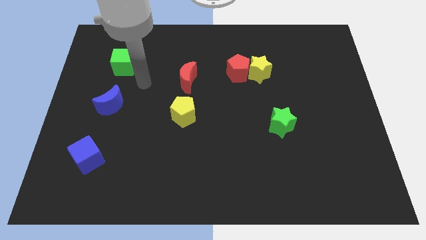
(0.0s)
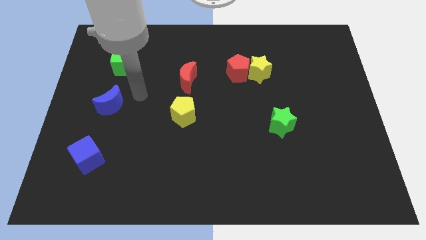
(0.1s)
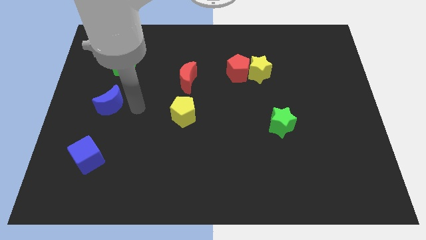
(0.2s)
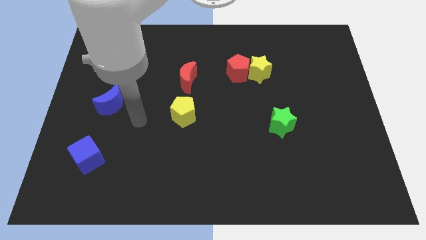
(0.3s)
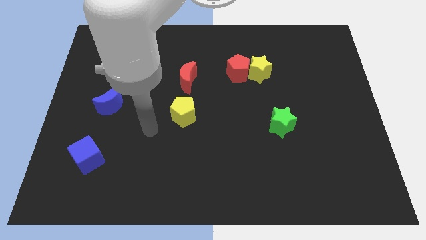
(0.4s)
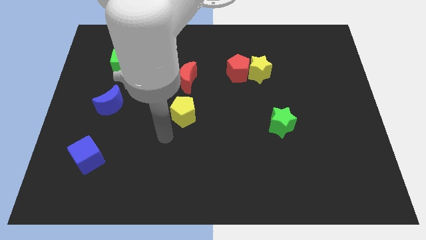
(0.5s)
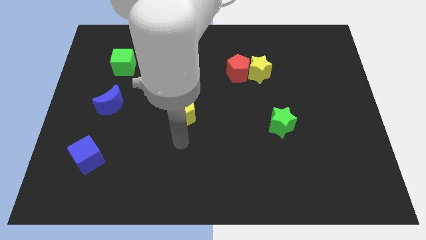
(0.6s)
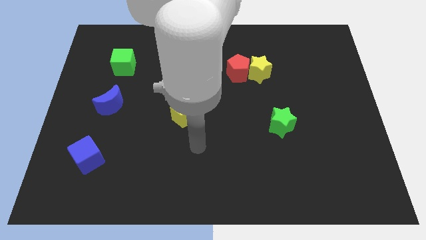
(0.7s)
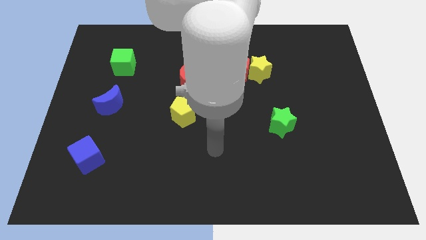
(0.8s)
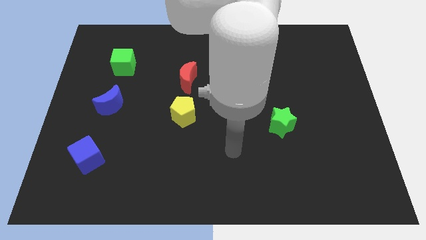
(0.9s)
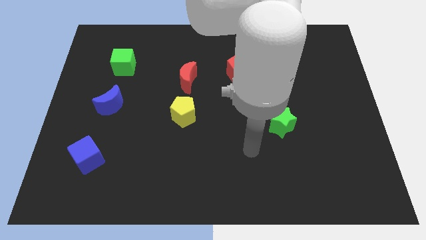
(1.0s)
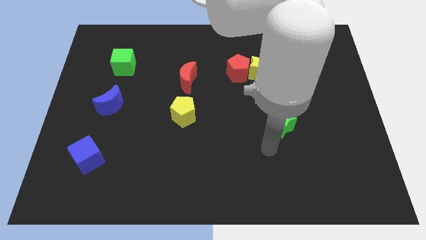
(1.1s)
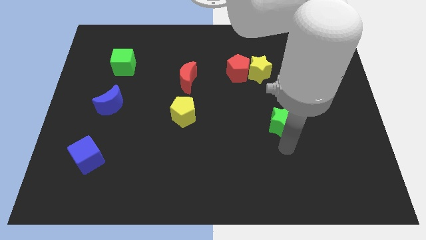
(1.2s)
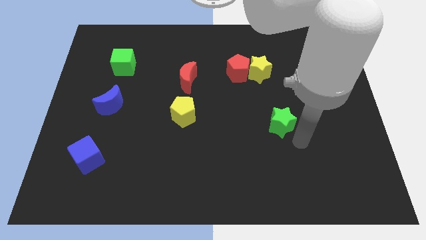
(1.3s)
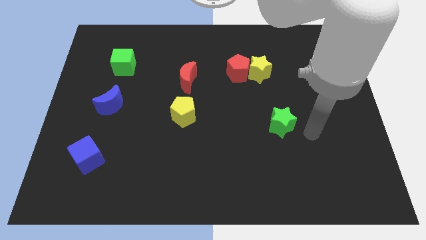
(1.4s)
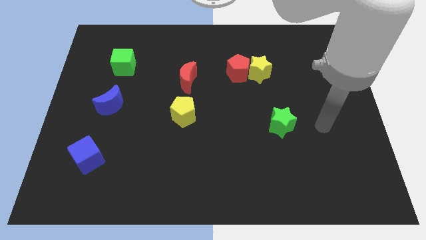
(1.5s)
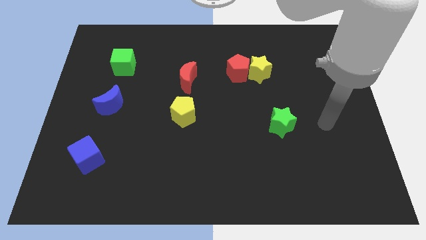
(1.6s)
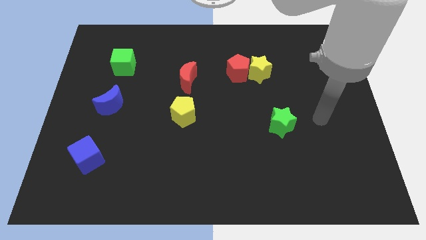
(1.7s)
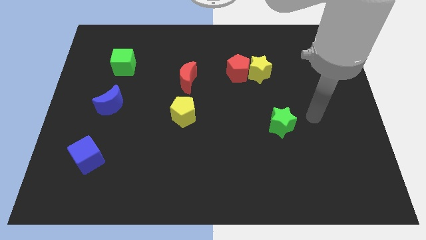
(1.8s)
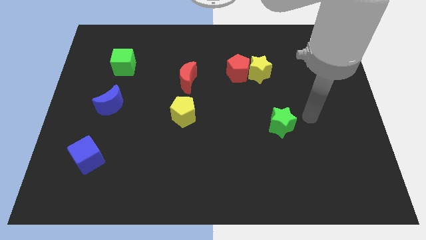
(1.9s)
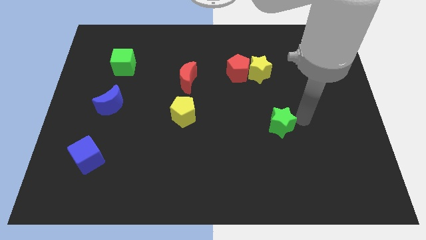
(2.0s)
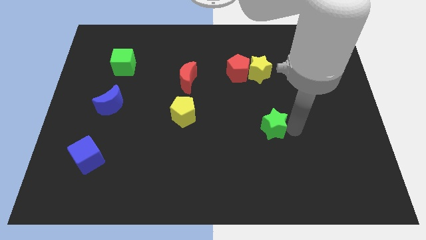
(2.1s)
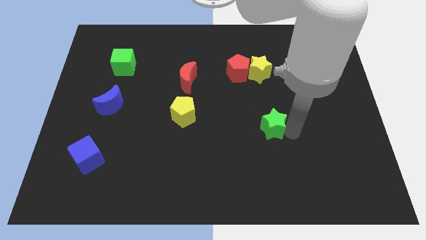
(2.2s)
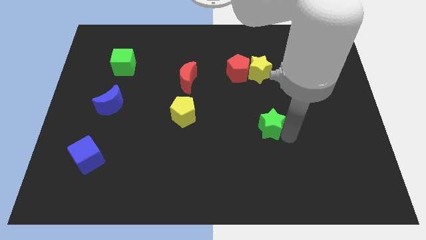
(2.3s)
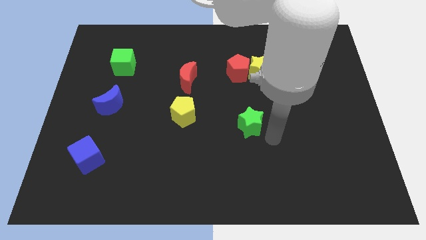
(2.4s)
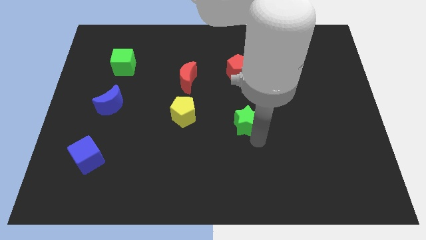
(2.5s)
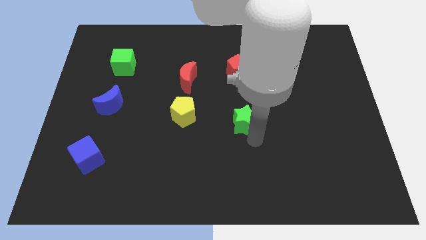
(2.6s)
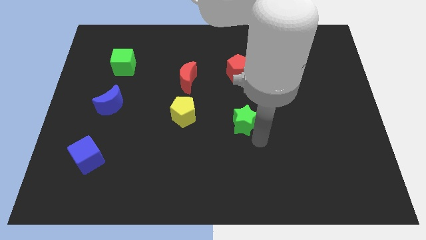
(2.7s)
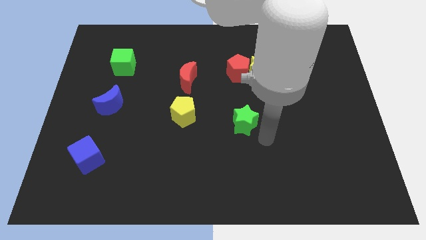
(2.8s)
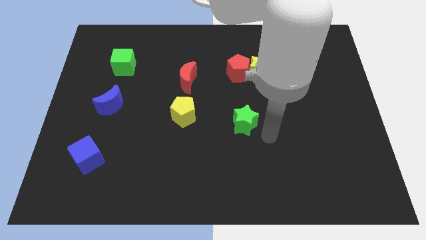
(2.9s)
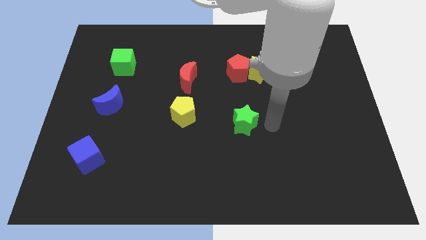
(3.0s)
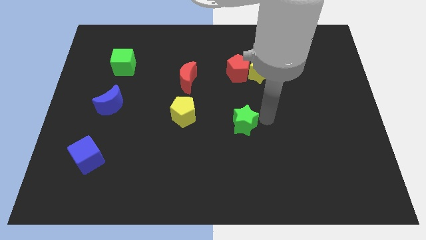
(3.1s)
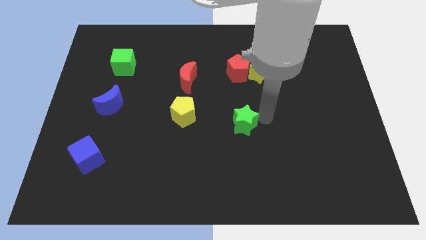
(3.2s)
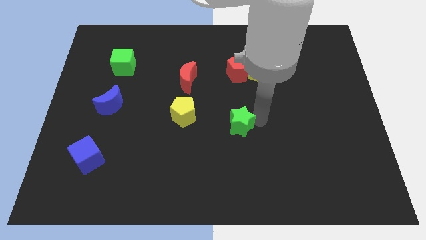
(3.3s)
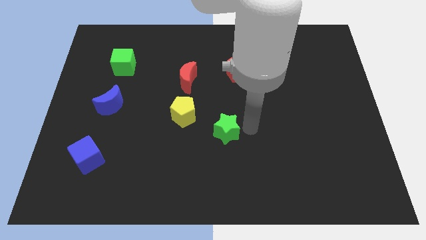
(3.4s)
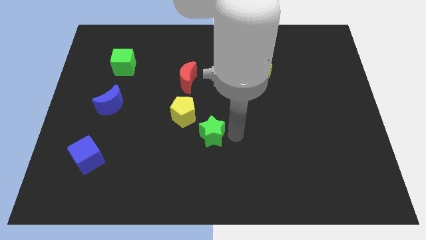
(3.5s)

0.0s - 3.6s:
push the green star

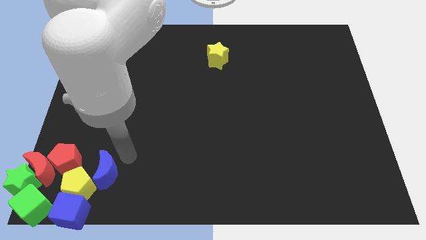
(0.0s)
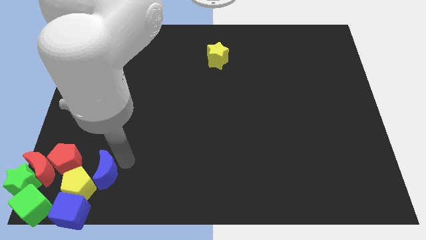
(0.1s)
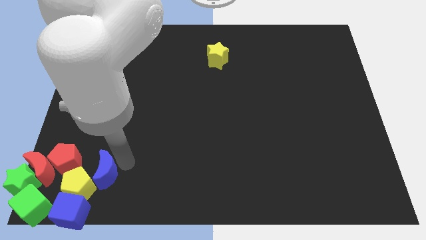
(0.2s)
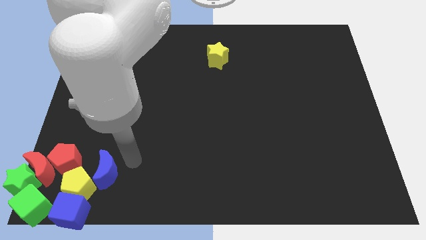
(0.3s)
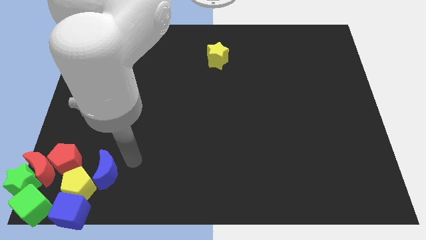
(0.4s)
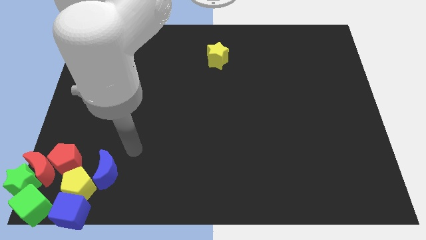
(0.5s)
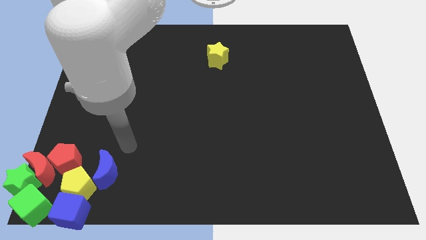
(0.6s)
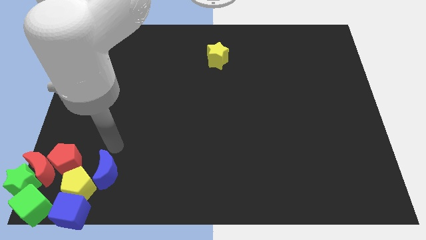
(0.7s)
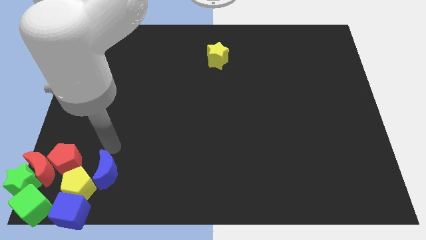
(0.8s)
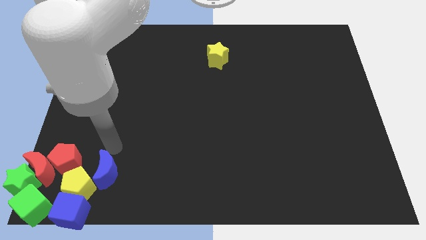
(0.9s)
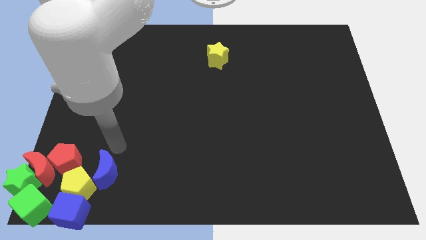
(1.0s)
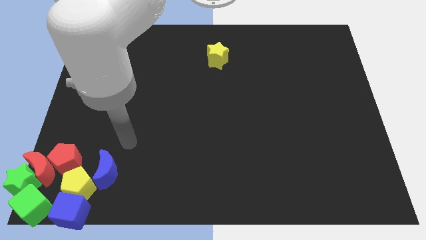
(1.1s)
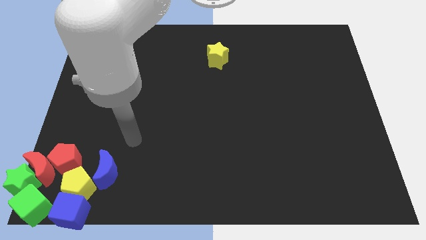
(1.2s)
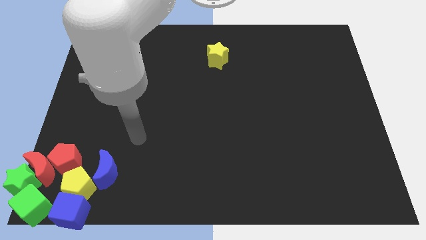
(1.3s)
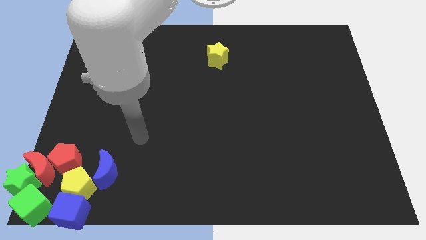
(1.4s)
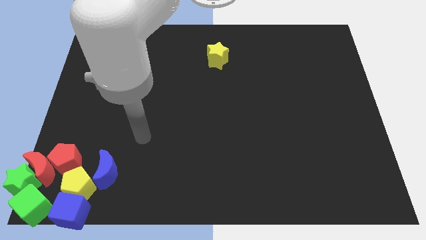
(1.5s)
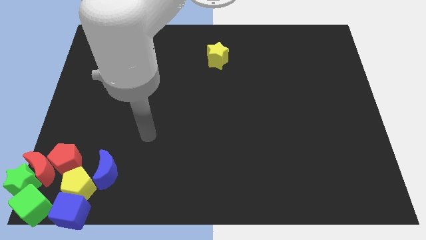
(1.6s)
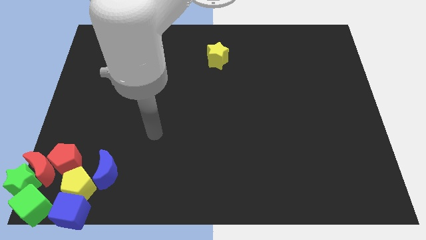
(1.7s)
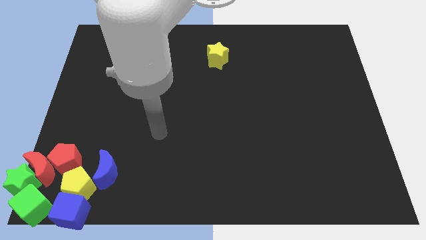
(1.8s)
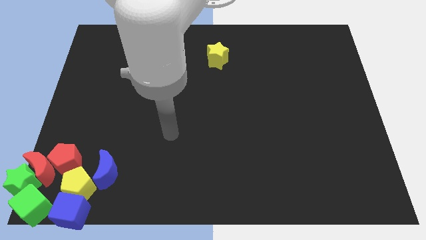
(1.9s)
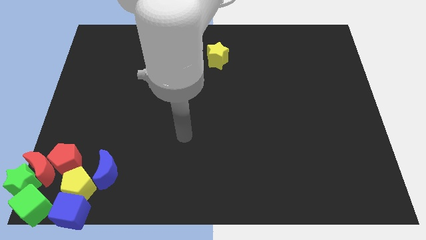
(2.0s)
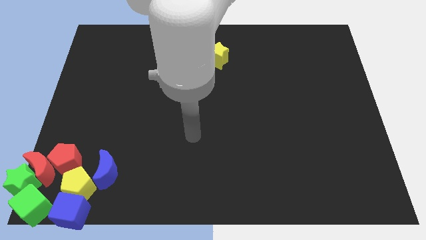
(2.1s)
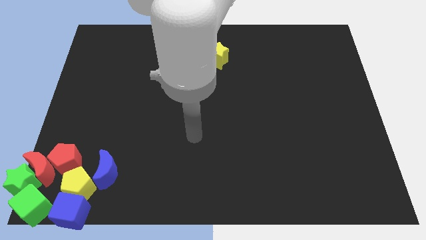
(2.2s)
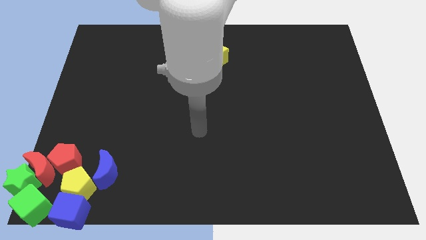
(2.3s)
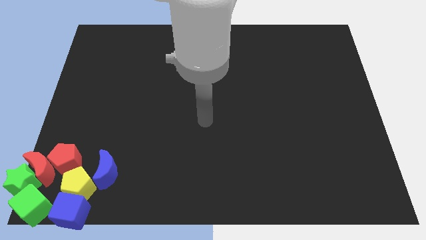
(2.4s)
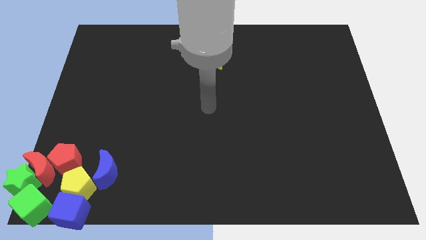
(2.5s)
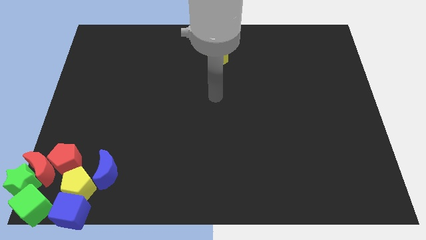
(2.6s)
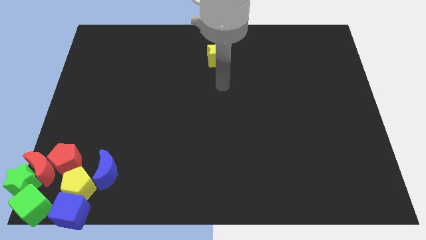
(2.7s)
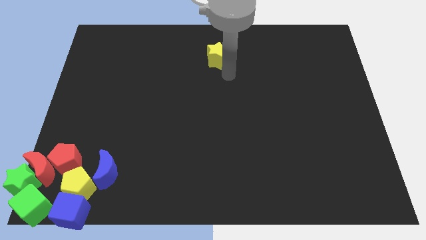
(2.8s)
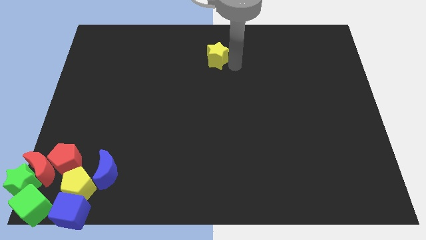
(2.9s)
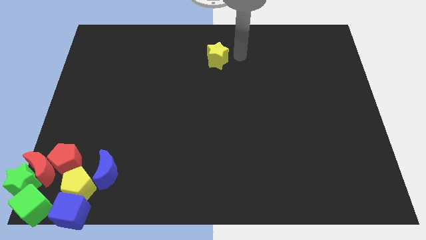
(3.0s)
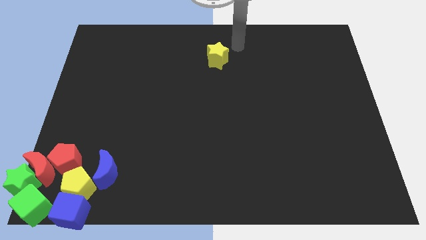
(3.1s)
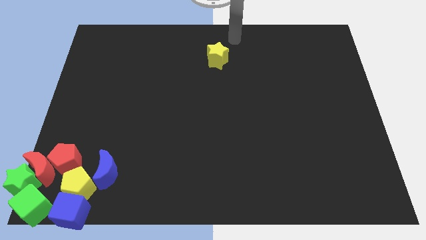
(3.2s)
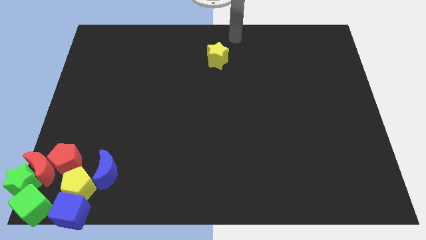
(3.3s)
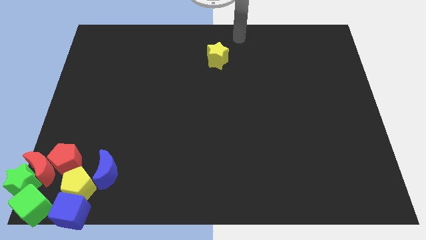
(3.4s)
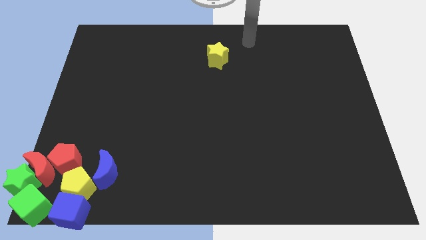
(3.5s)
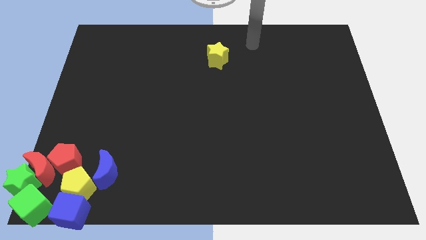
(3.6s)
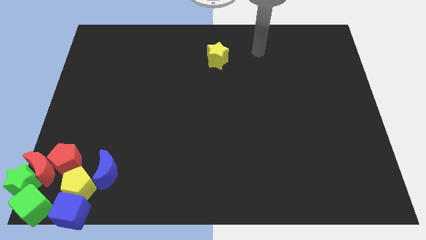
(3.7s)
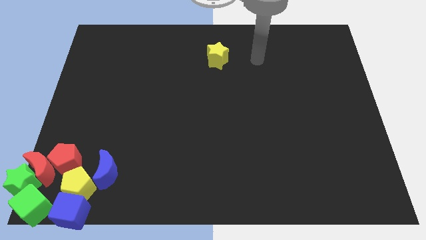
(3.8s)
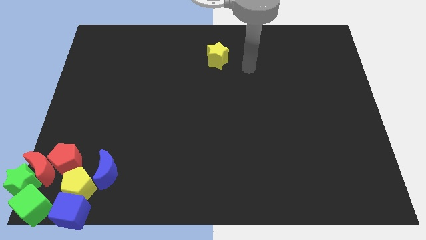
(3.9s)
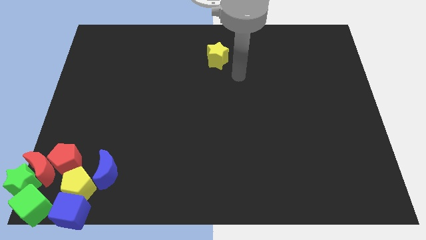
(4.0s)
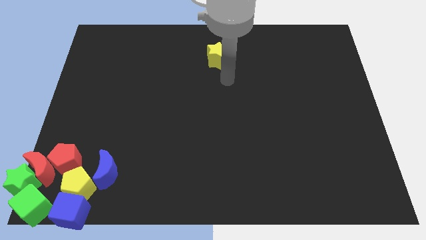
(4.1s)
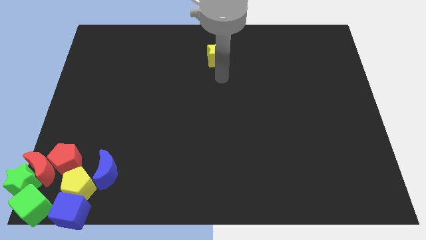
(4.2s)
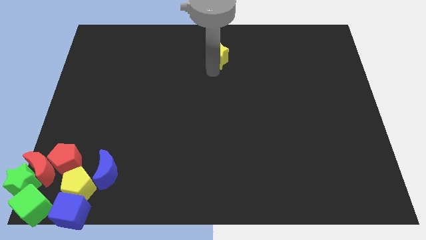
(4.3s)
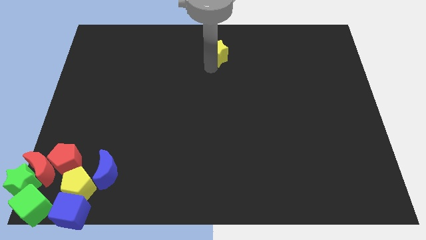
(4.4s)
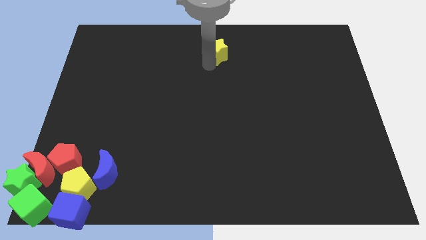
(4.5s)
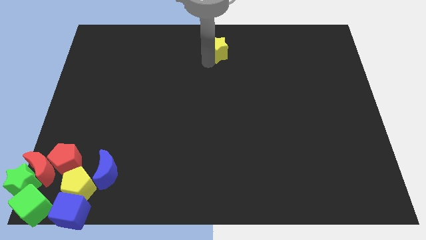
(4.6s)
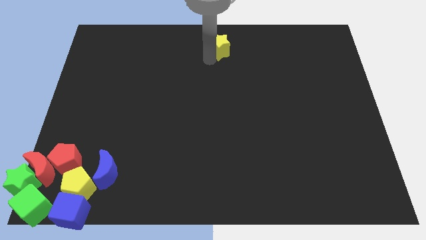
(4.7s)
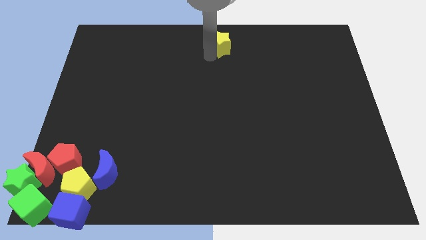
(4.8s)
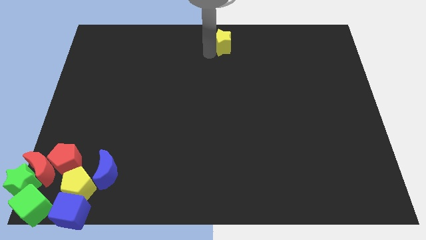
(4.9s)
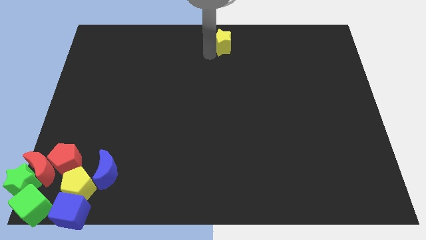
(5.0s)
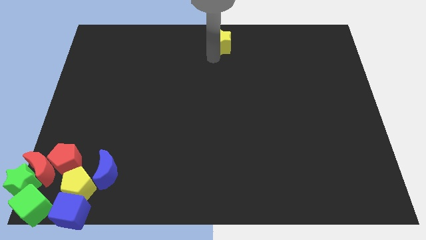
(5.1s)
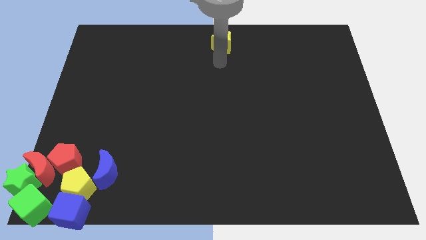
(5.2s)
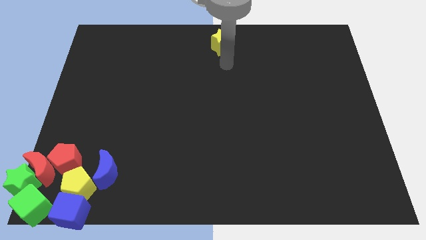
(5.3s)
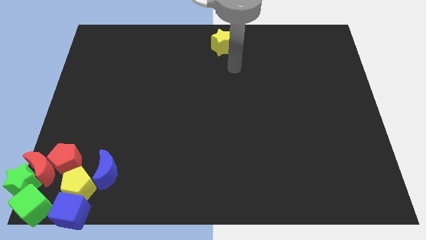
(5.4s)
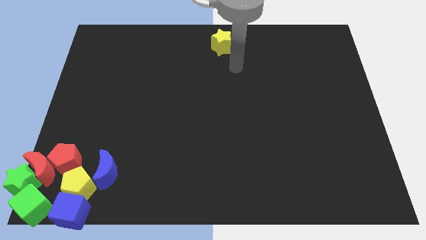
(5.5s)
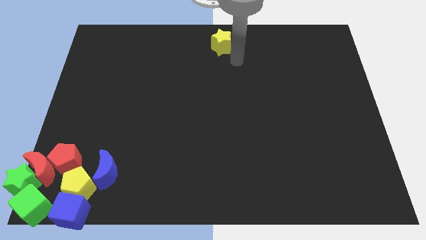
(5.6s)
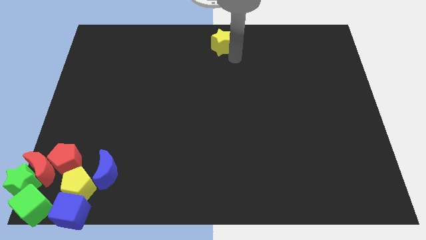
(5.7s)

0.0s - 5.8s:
slightly push the yellow star towards the top center of the board
